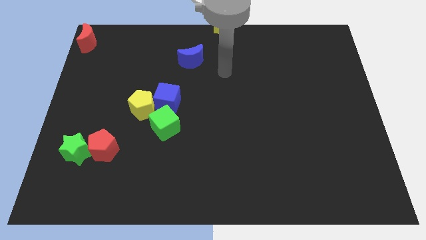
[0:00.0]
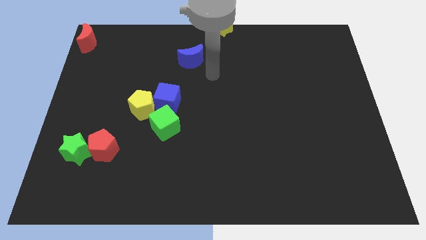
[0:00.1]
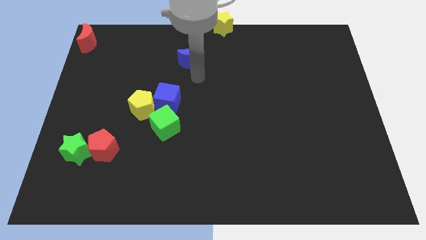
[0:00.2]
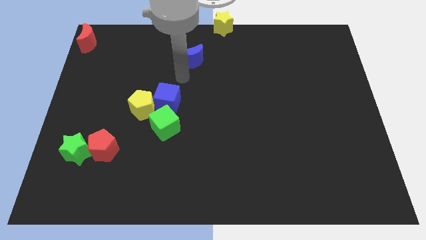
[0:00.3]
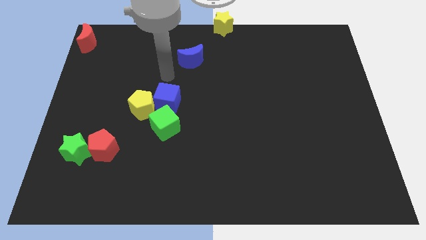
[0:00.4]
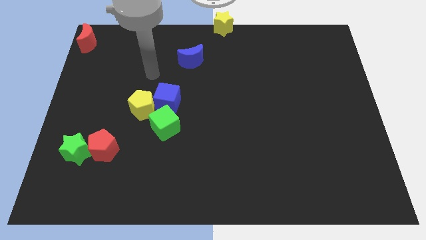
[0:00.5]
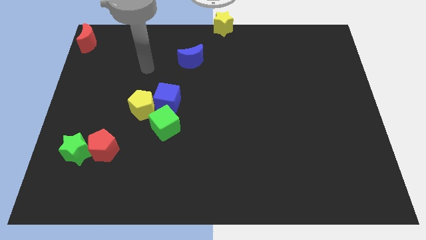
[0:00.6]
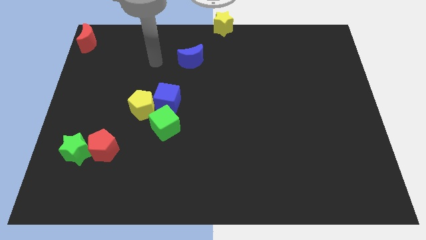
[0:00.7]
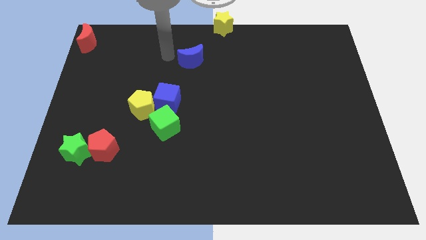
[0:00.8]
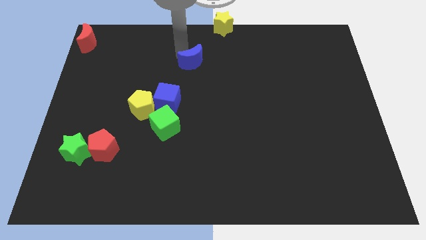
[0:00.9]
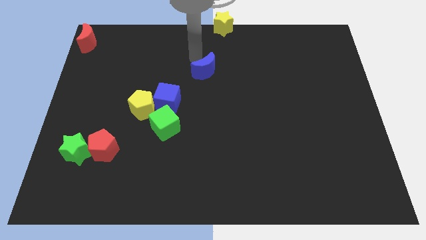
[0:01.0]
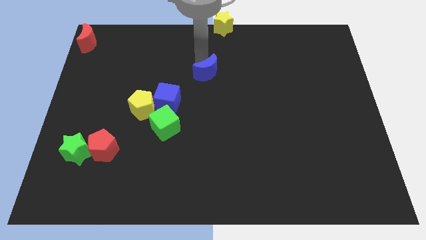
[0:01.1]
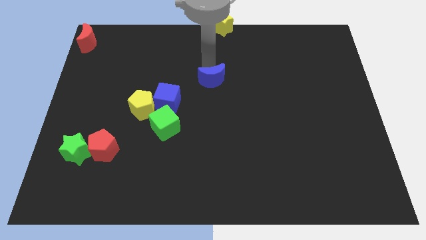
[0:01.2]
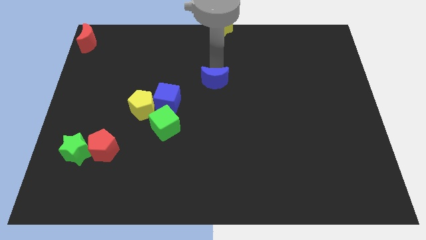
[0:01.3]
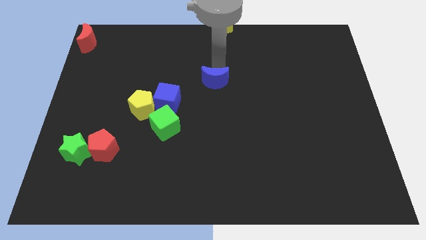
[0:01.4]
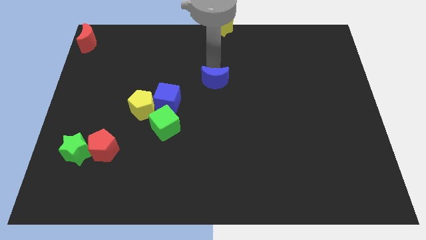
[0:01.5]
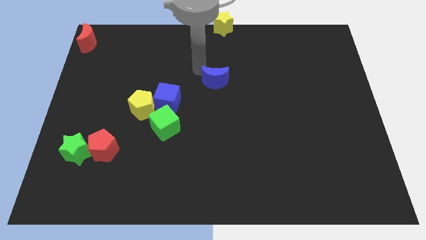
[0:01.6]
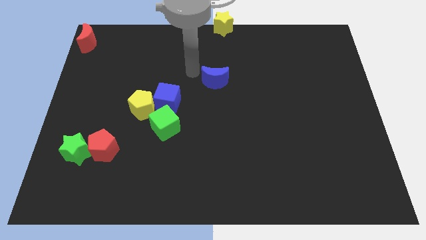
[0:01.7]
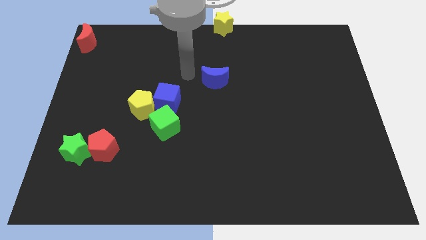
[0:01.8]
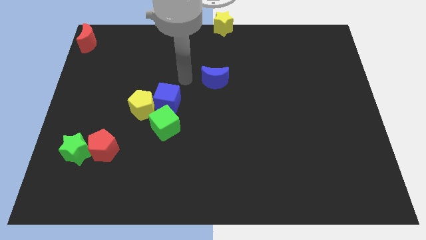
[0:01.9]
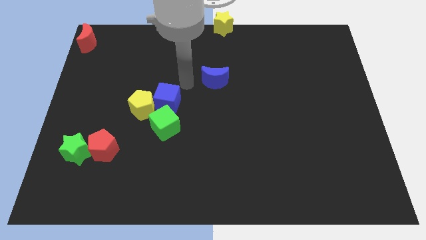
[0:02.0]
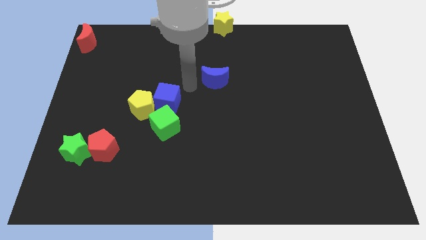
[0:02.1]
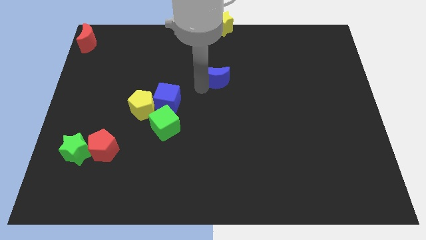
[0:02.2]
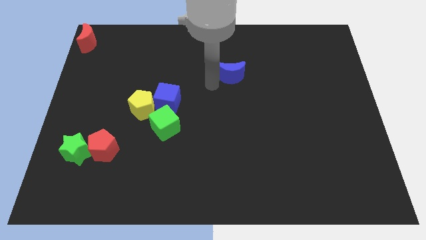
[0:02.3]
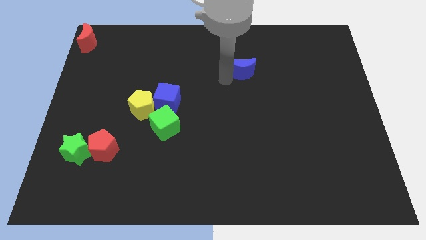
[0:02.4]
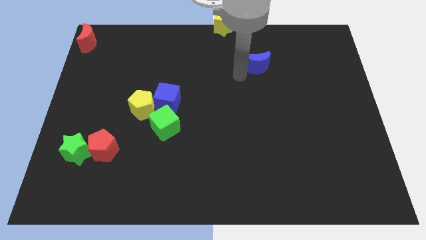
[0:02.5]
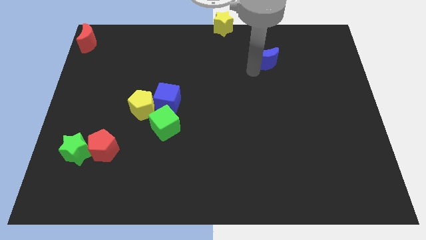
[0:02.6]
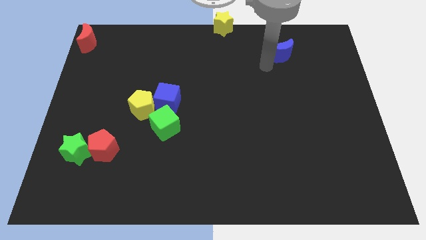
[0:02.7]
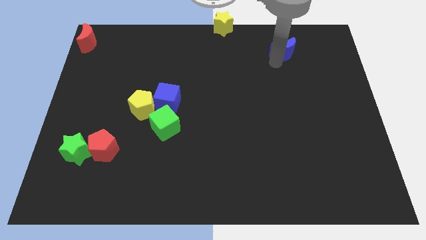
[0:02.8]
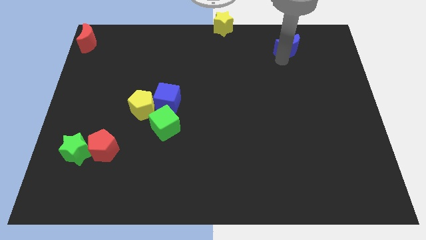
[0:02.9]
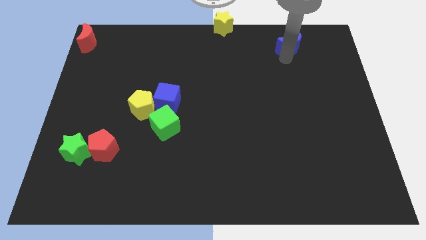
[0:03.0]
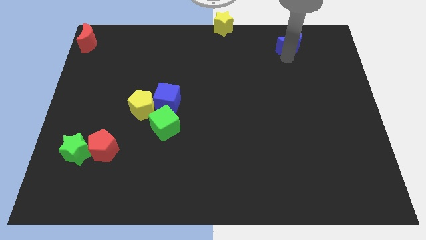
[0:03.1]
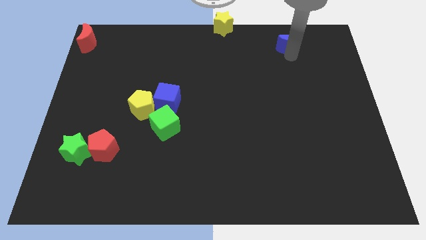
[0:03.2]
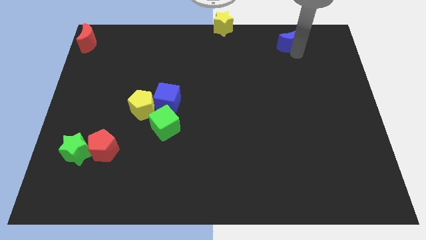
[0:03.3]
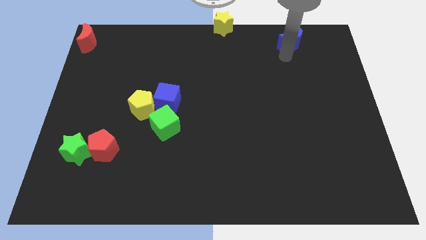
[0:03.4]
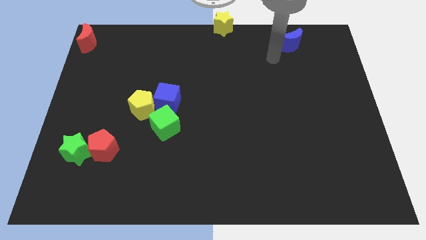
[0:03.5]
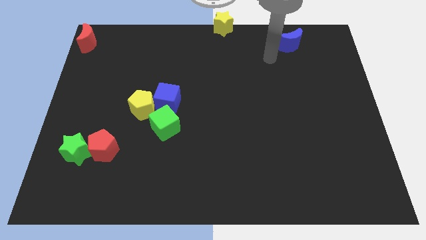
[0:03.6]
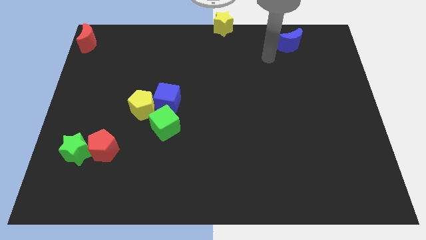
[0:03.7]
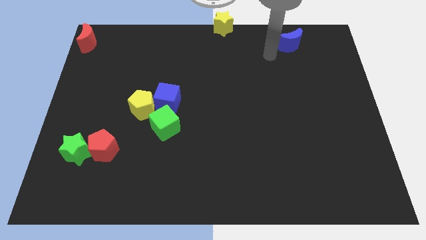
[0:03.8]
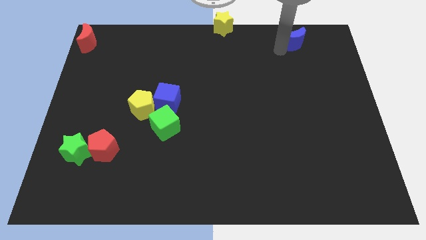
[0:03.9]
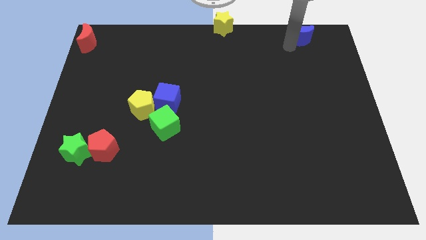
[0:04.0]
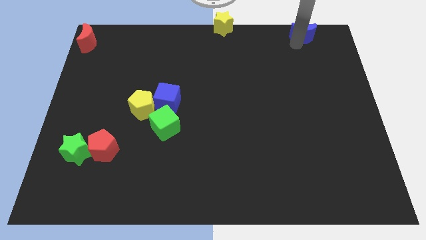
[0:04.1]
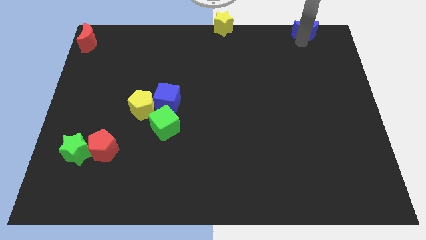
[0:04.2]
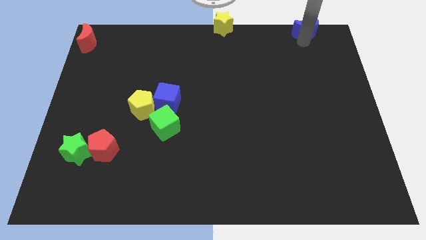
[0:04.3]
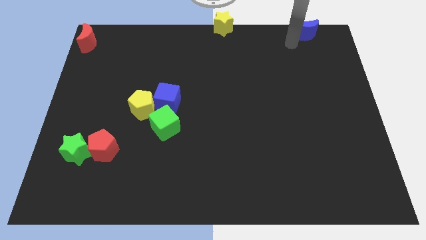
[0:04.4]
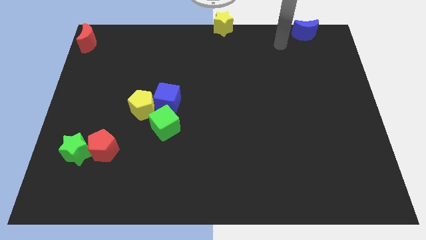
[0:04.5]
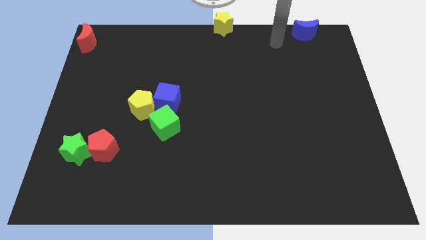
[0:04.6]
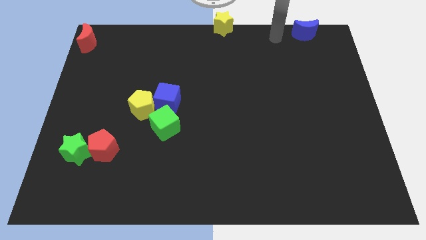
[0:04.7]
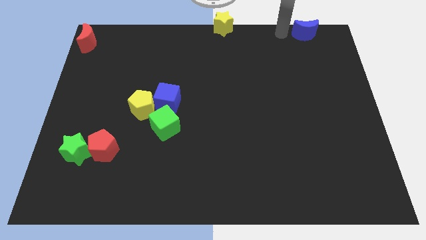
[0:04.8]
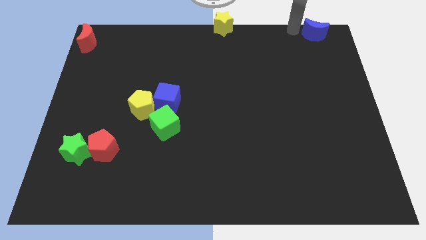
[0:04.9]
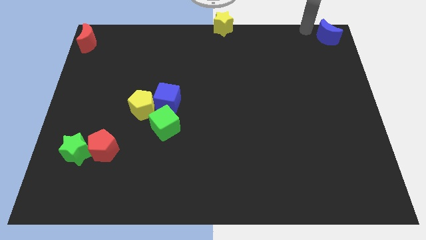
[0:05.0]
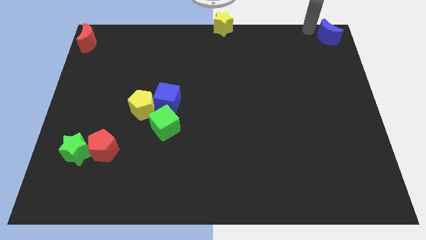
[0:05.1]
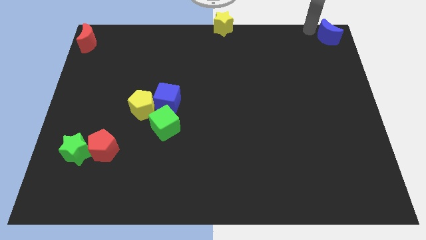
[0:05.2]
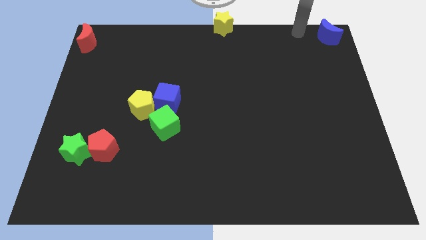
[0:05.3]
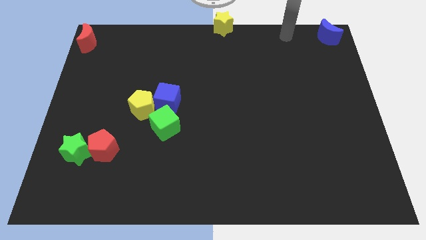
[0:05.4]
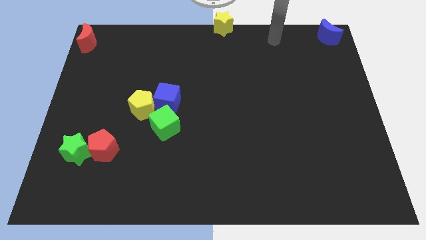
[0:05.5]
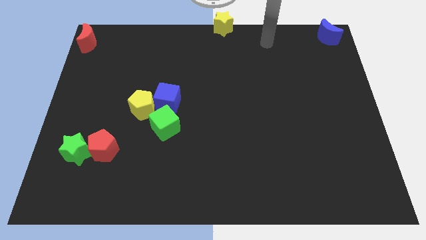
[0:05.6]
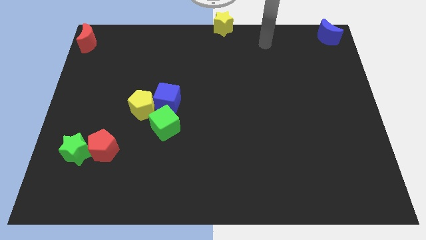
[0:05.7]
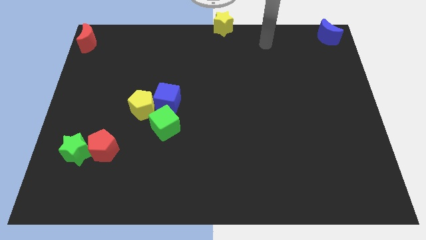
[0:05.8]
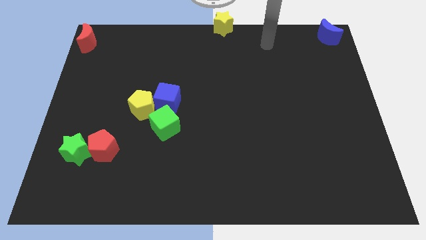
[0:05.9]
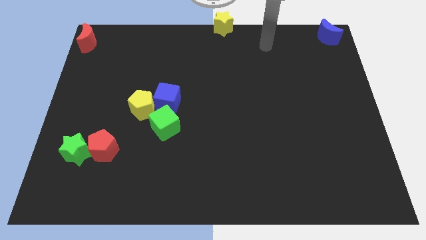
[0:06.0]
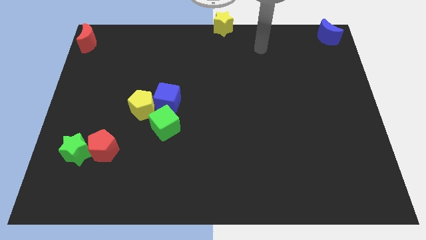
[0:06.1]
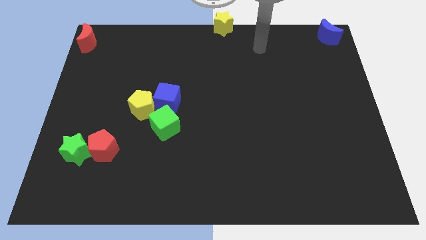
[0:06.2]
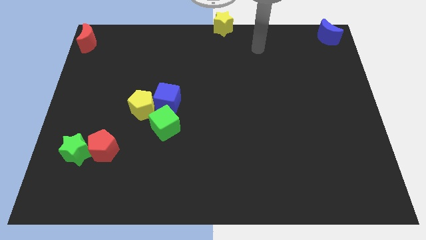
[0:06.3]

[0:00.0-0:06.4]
place the blue moon at the top right corner of the board

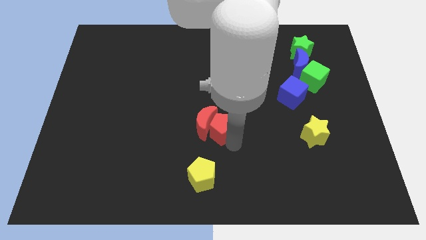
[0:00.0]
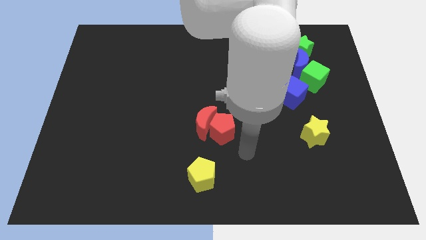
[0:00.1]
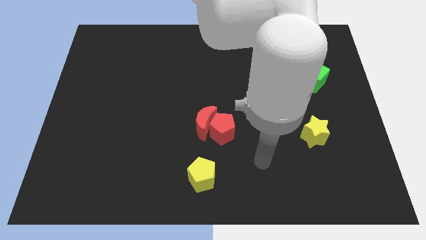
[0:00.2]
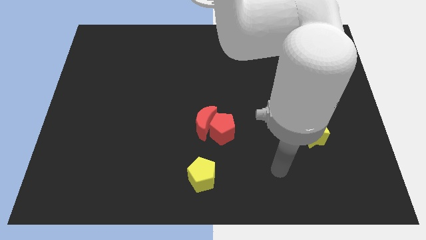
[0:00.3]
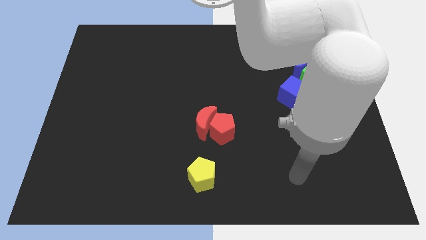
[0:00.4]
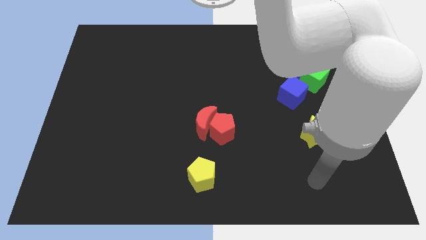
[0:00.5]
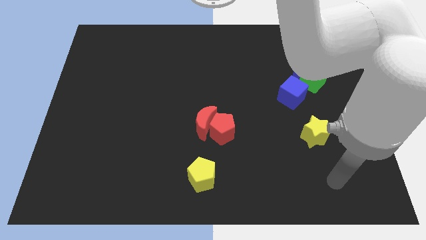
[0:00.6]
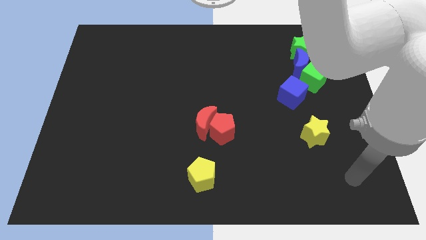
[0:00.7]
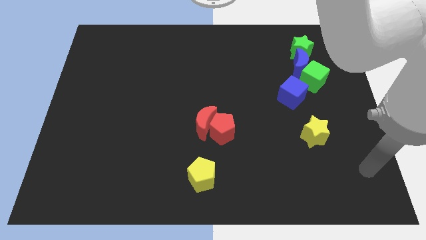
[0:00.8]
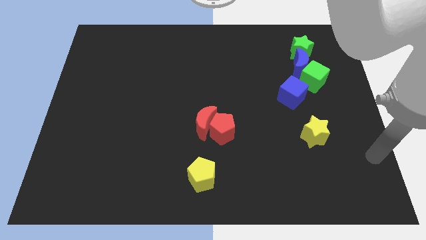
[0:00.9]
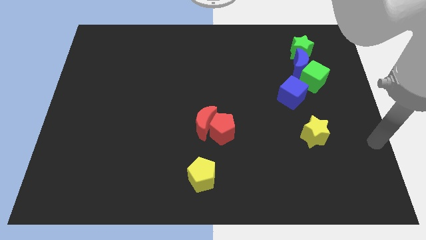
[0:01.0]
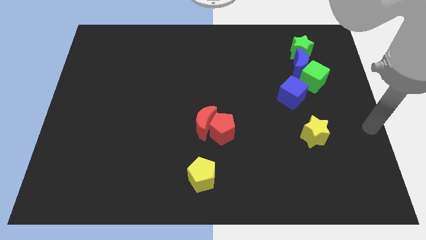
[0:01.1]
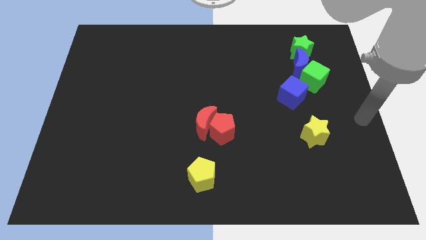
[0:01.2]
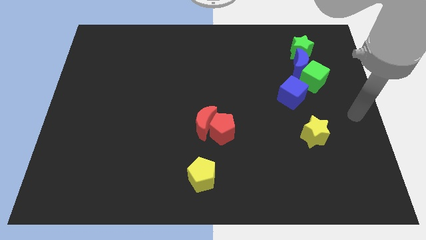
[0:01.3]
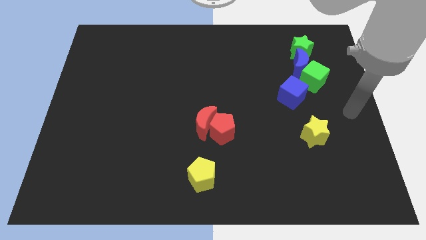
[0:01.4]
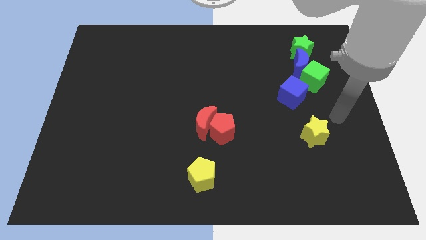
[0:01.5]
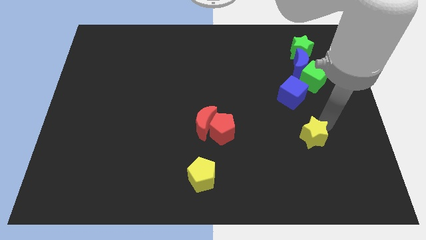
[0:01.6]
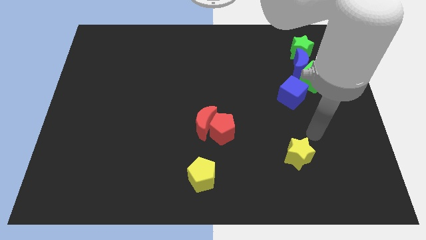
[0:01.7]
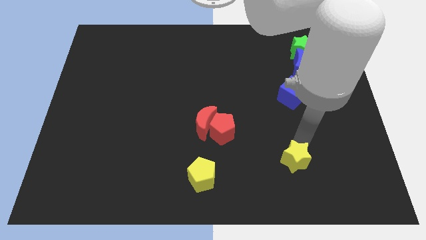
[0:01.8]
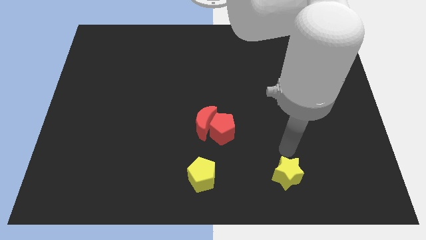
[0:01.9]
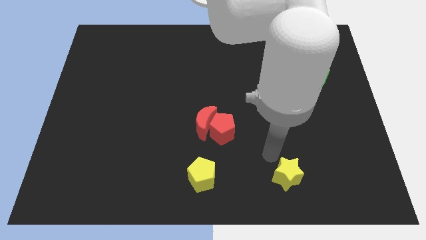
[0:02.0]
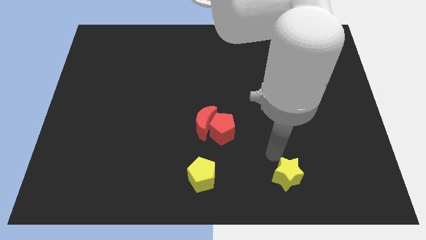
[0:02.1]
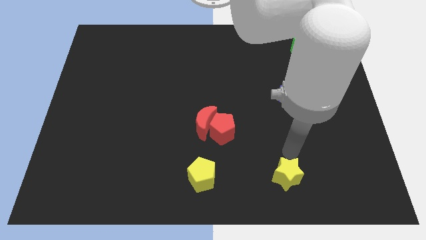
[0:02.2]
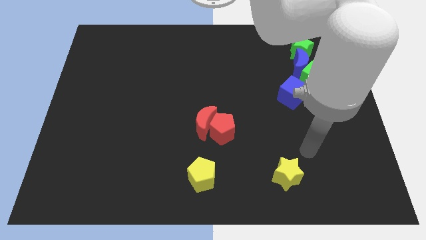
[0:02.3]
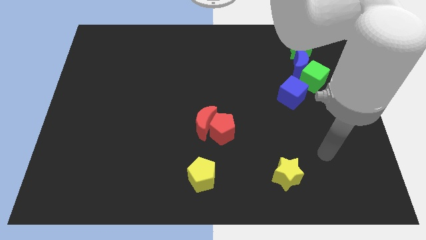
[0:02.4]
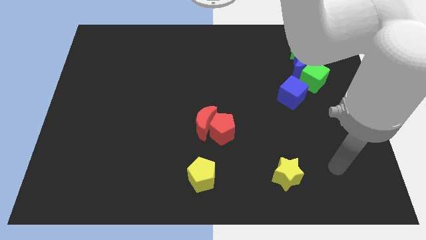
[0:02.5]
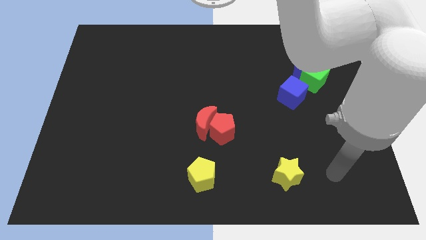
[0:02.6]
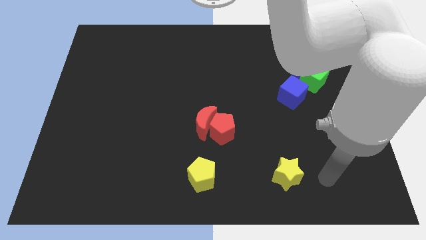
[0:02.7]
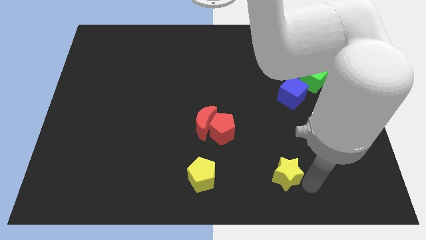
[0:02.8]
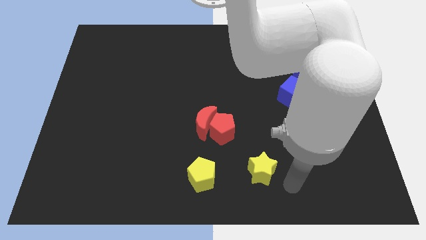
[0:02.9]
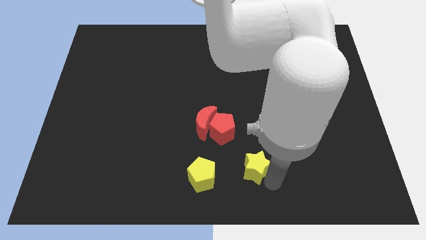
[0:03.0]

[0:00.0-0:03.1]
place the yellow star right to the yellow pentagon
